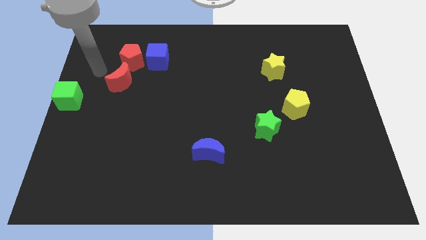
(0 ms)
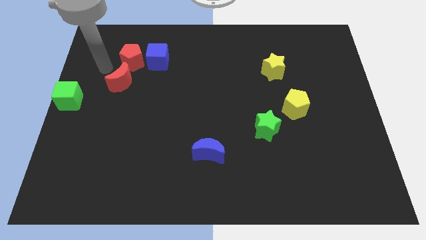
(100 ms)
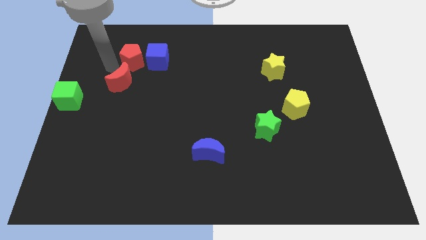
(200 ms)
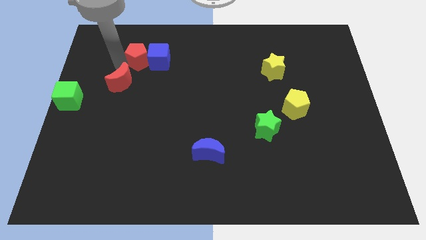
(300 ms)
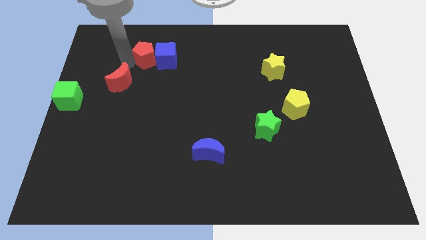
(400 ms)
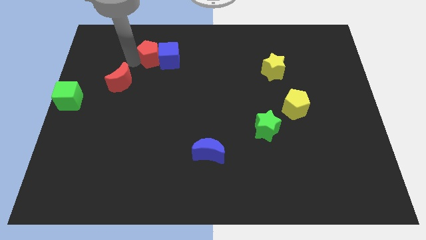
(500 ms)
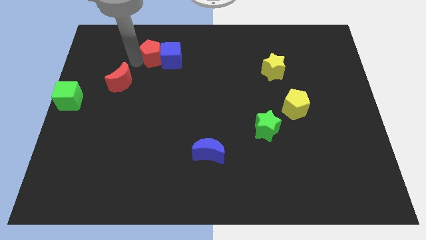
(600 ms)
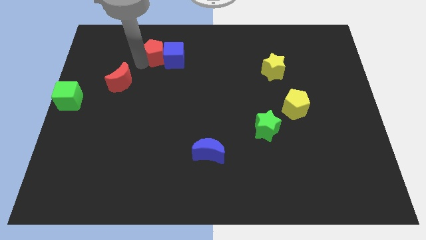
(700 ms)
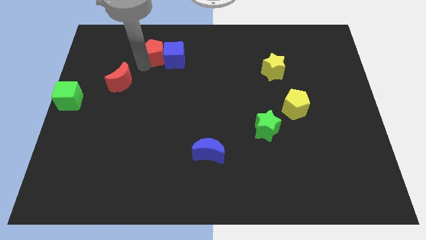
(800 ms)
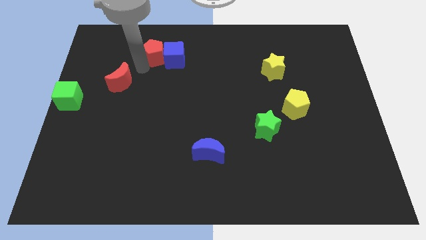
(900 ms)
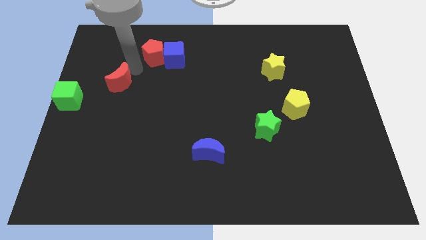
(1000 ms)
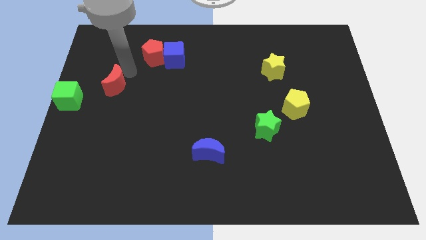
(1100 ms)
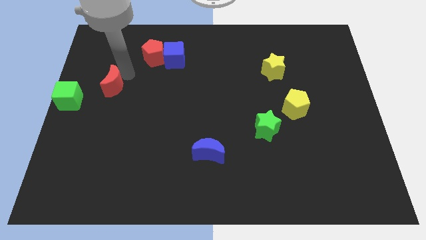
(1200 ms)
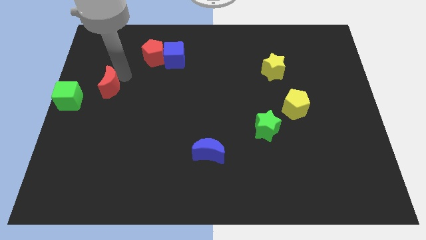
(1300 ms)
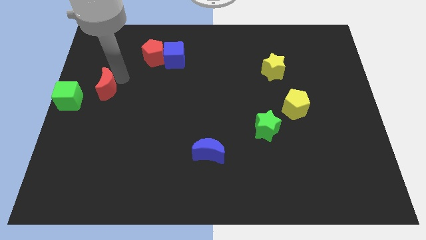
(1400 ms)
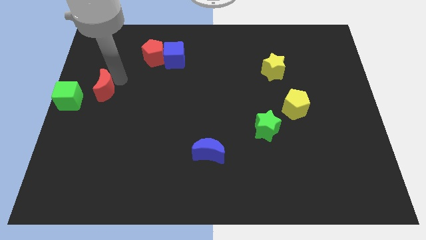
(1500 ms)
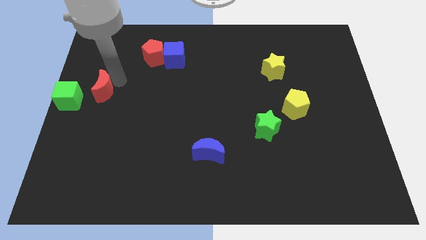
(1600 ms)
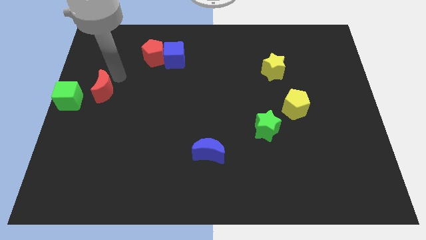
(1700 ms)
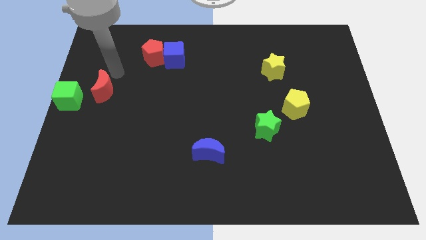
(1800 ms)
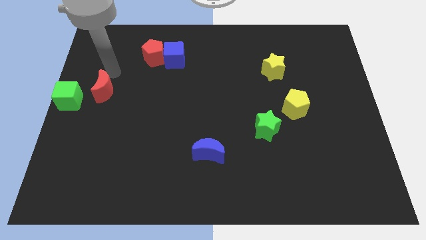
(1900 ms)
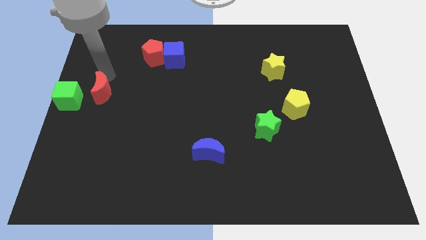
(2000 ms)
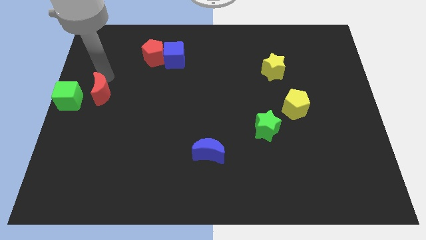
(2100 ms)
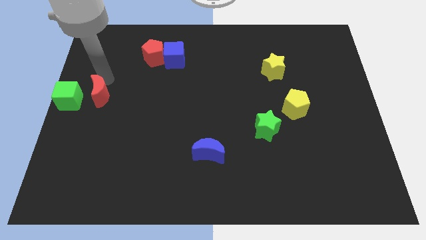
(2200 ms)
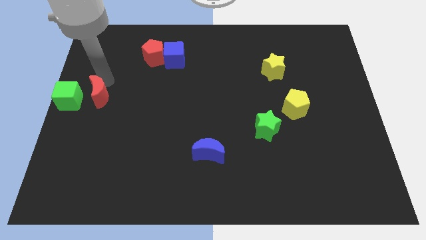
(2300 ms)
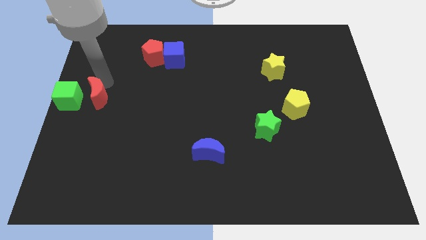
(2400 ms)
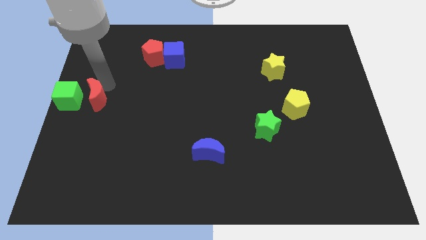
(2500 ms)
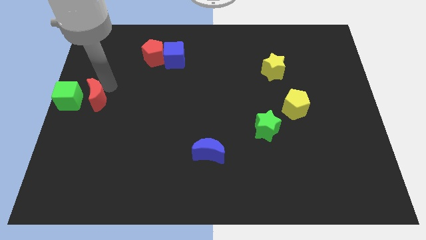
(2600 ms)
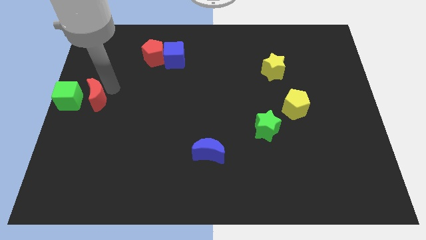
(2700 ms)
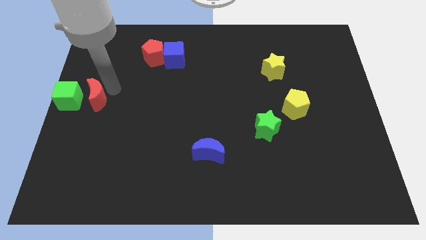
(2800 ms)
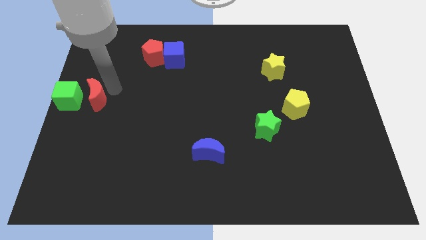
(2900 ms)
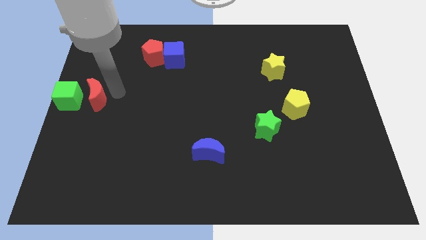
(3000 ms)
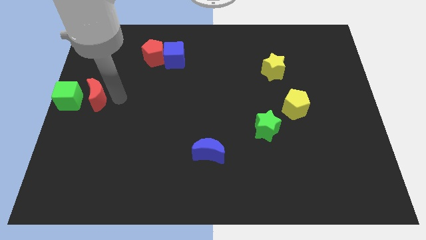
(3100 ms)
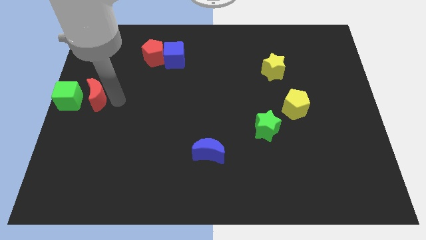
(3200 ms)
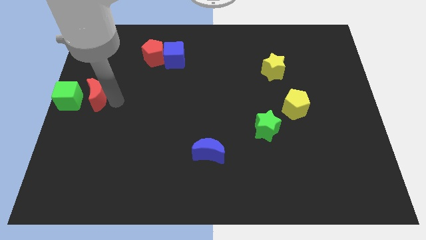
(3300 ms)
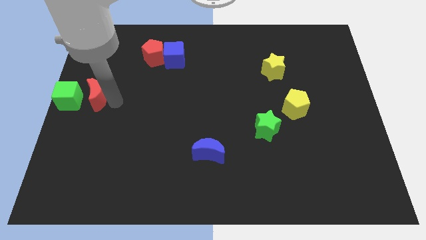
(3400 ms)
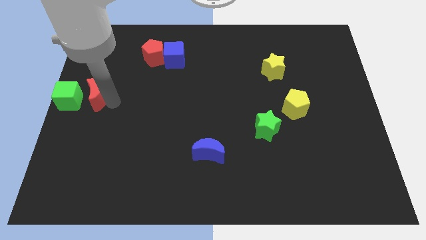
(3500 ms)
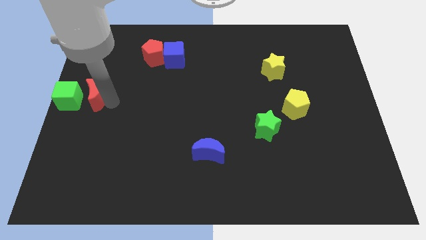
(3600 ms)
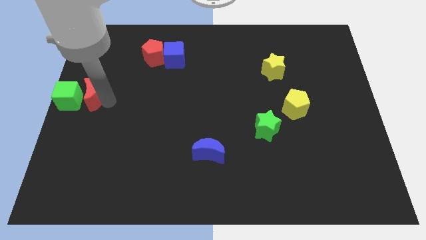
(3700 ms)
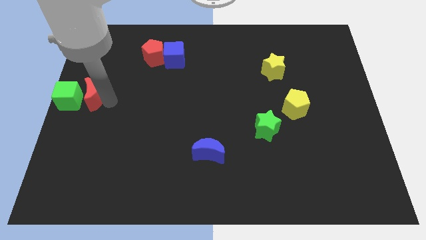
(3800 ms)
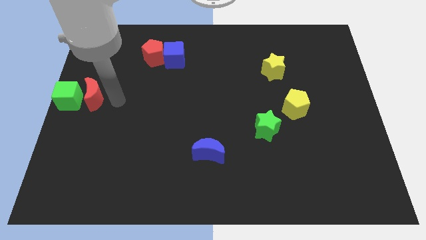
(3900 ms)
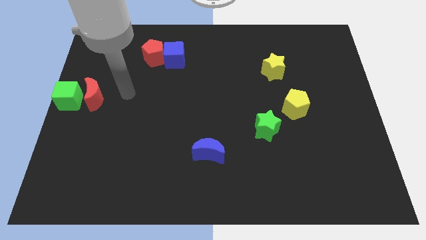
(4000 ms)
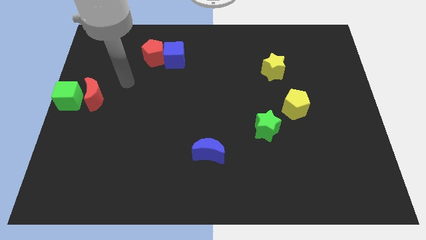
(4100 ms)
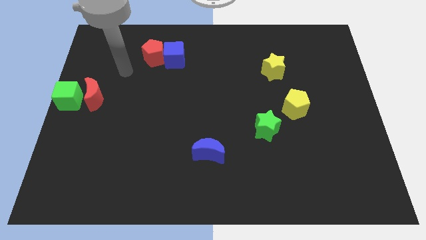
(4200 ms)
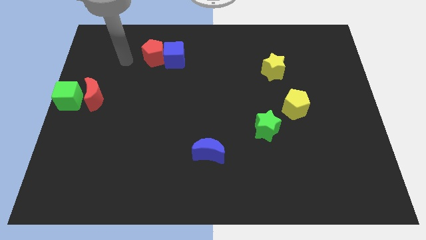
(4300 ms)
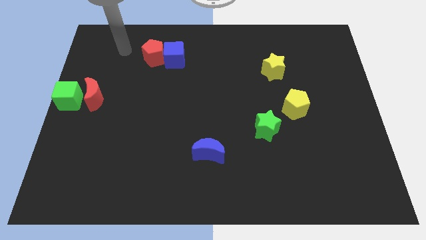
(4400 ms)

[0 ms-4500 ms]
move the red crescent right beside the green cube

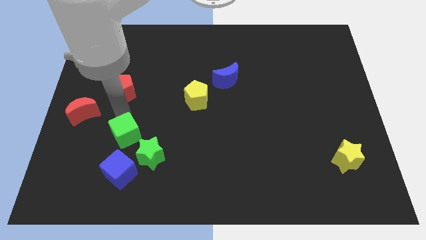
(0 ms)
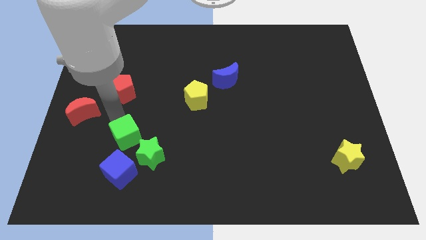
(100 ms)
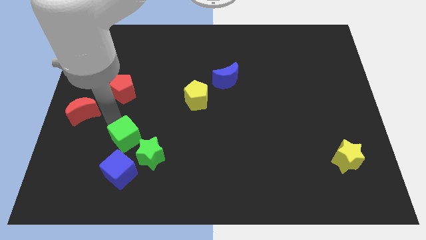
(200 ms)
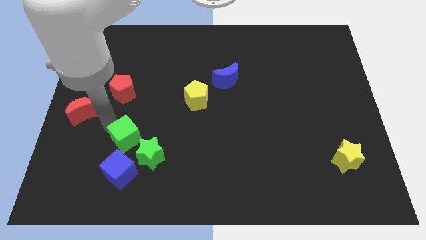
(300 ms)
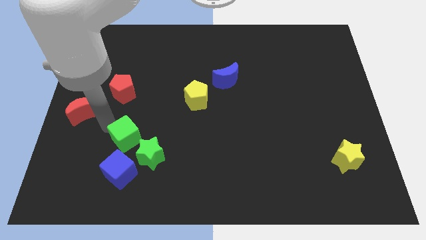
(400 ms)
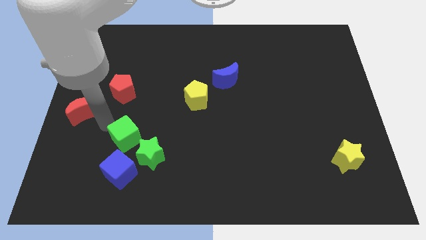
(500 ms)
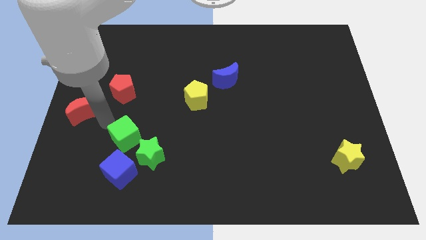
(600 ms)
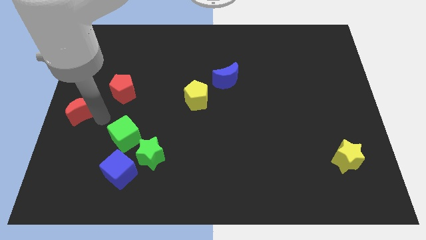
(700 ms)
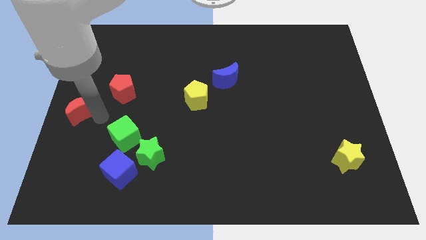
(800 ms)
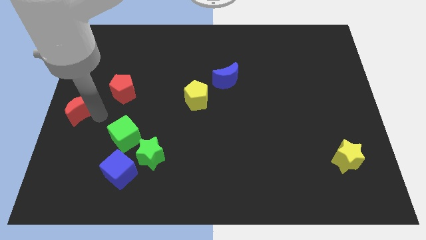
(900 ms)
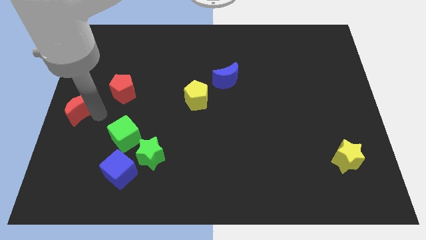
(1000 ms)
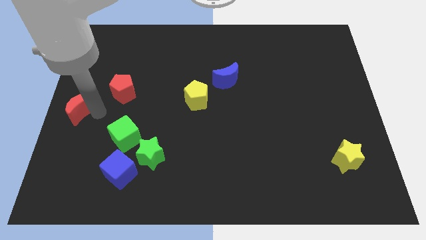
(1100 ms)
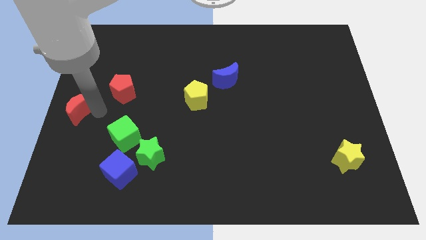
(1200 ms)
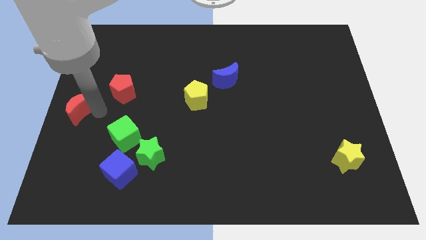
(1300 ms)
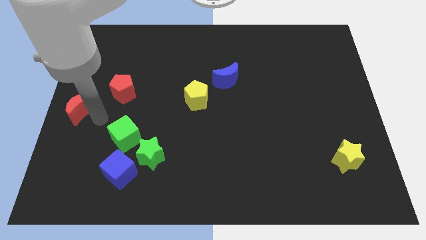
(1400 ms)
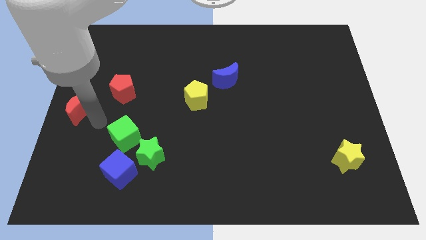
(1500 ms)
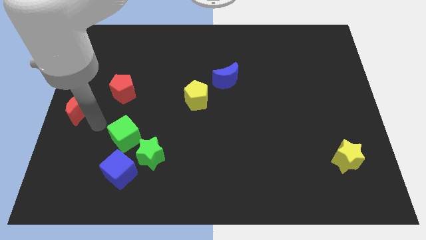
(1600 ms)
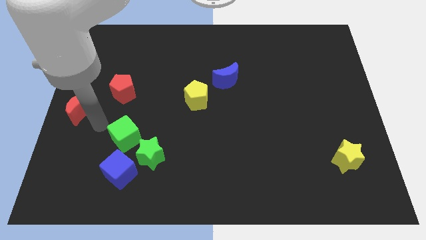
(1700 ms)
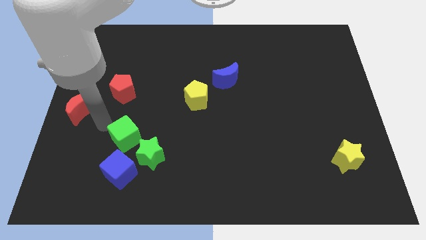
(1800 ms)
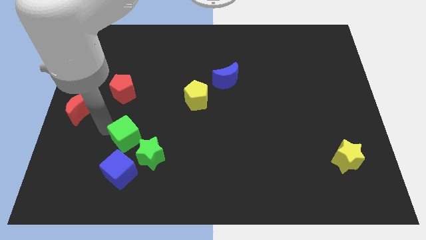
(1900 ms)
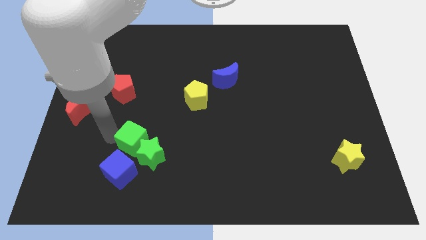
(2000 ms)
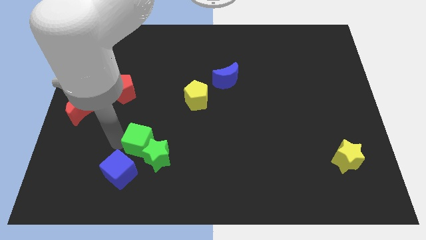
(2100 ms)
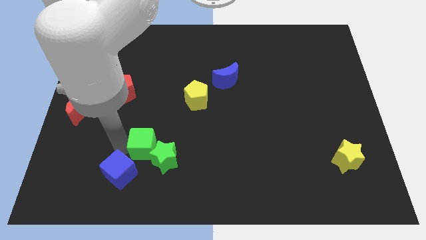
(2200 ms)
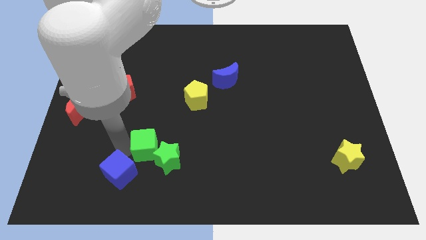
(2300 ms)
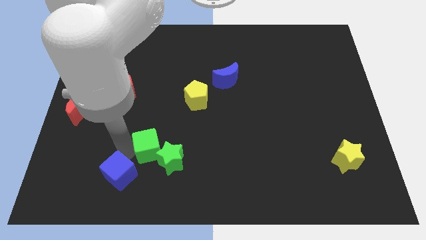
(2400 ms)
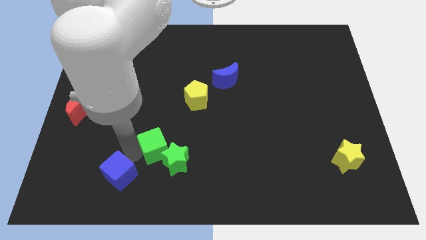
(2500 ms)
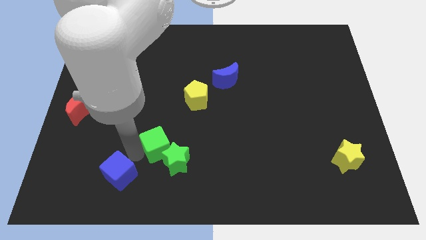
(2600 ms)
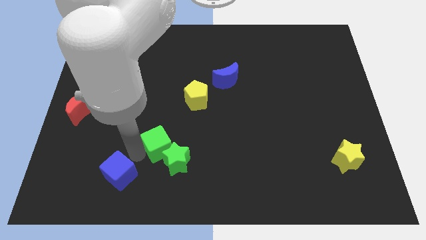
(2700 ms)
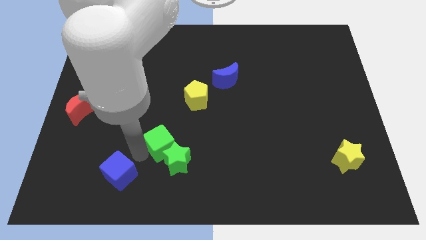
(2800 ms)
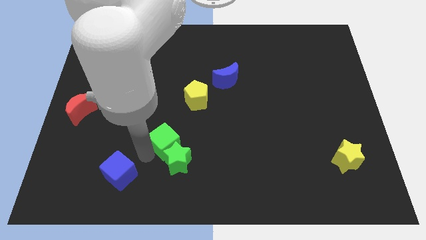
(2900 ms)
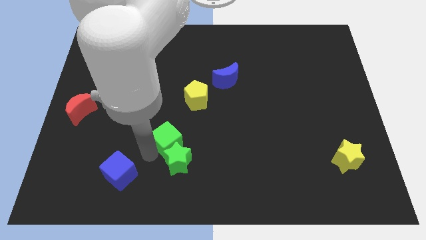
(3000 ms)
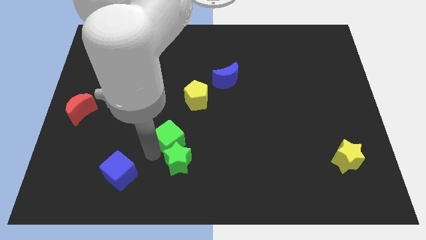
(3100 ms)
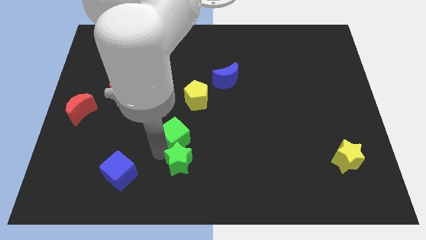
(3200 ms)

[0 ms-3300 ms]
push the green cube into the green star

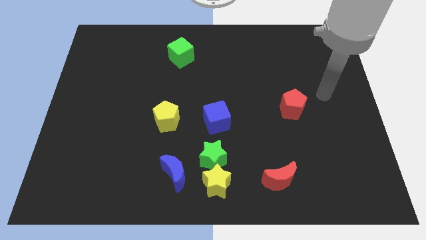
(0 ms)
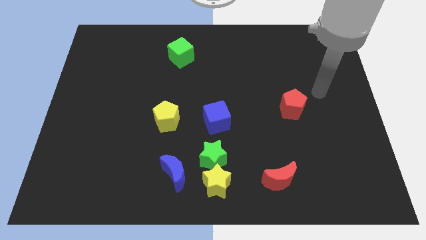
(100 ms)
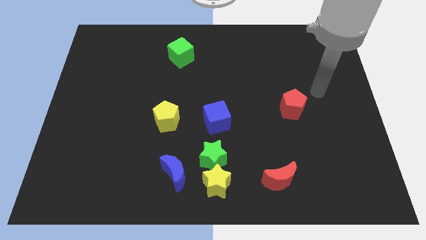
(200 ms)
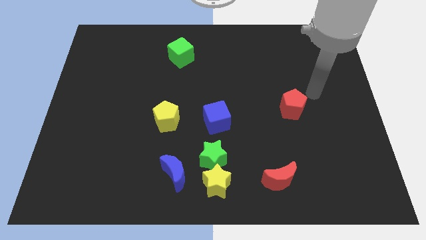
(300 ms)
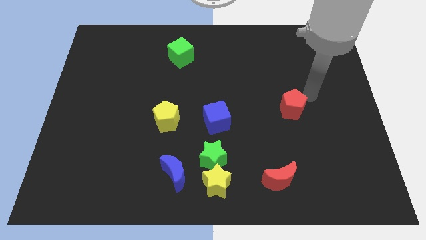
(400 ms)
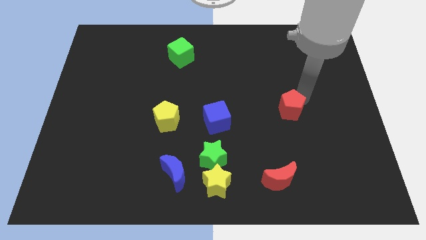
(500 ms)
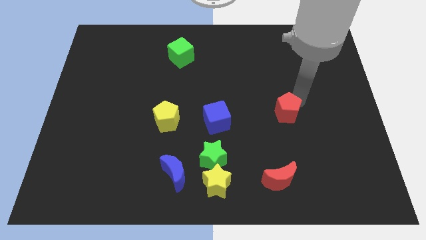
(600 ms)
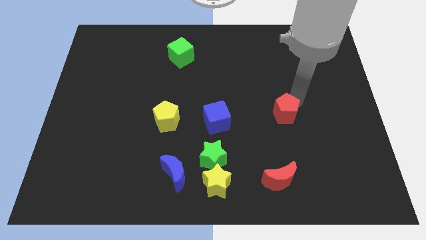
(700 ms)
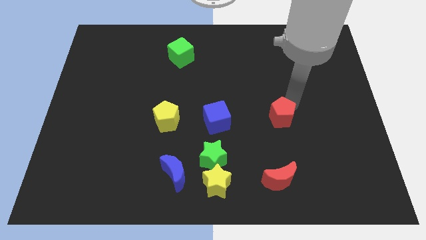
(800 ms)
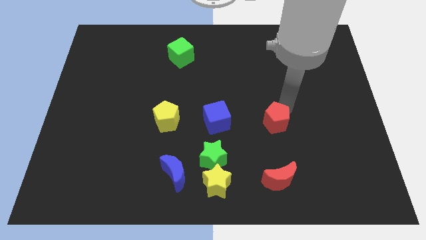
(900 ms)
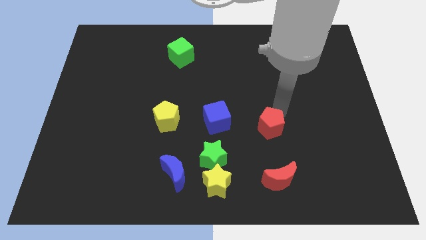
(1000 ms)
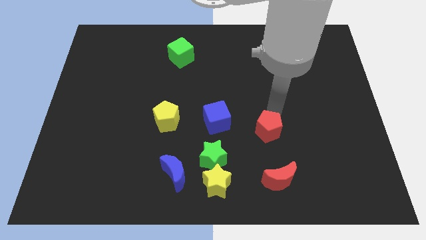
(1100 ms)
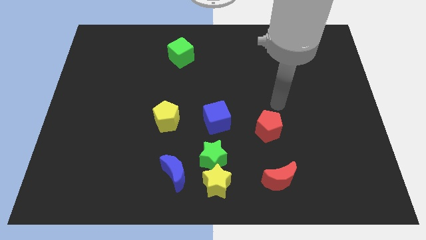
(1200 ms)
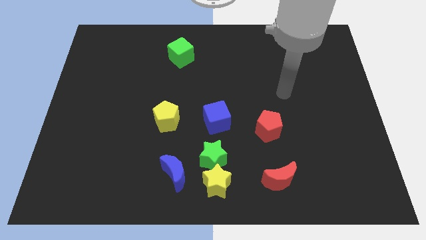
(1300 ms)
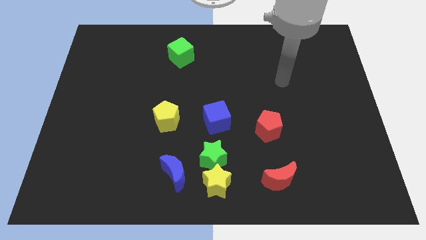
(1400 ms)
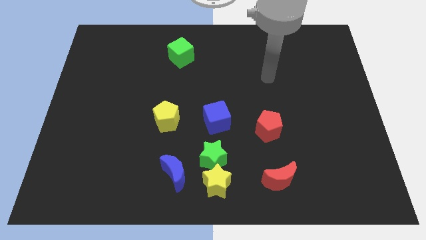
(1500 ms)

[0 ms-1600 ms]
push the red pentagon to the right of blue cube
